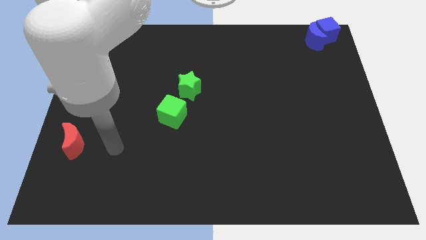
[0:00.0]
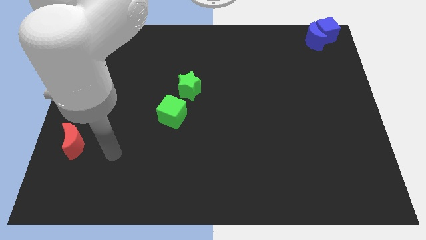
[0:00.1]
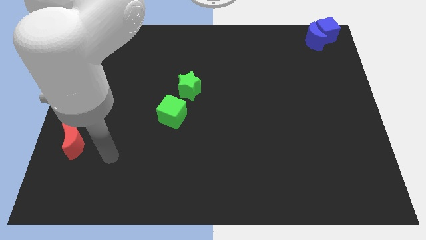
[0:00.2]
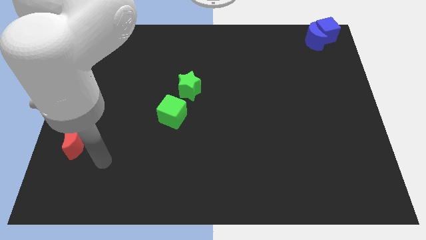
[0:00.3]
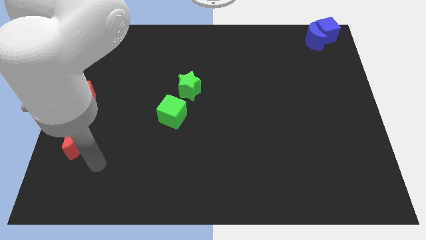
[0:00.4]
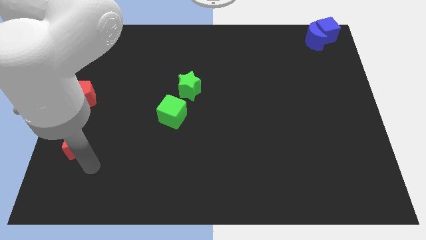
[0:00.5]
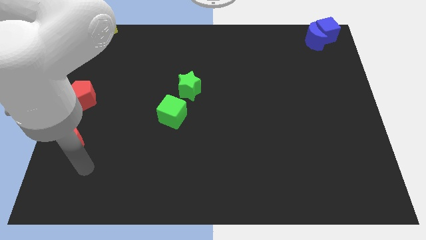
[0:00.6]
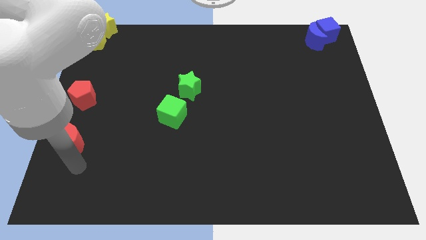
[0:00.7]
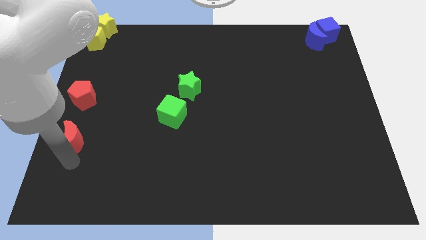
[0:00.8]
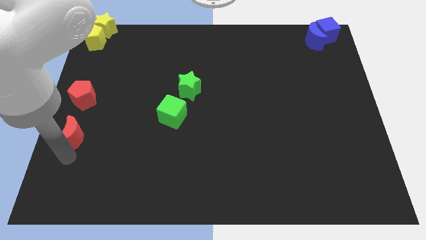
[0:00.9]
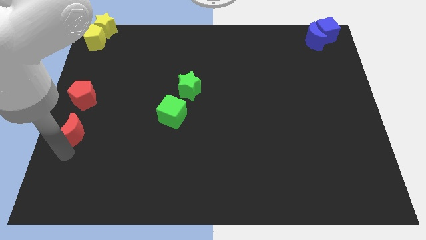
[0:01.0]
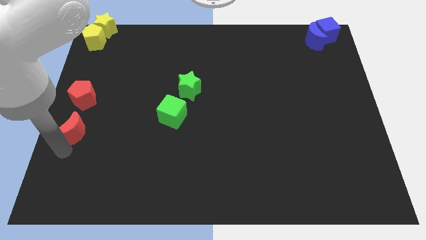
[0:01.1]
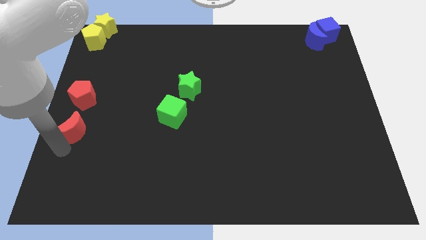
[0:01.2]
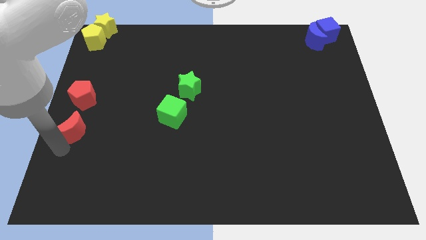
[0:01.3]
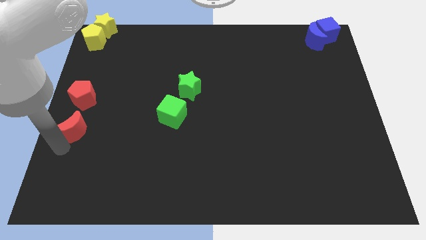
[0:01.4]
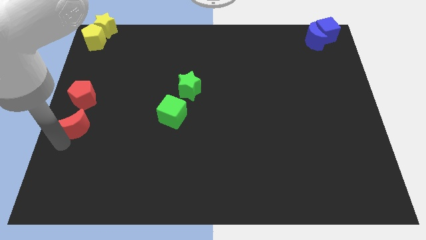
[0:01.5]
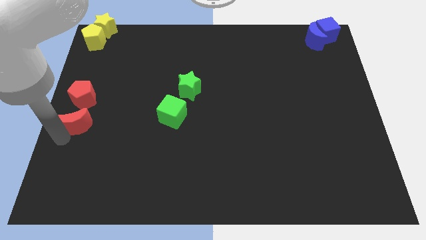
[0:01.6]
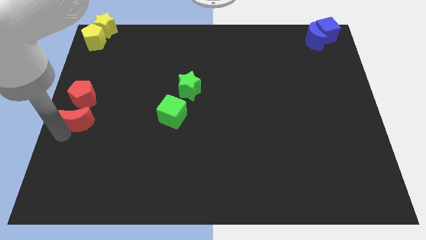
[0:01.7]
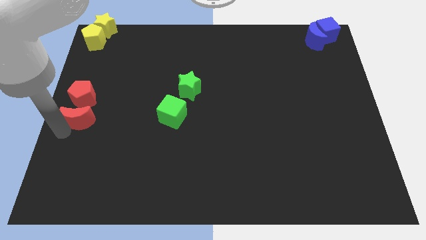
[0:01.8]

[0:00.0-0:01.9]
place the red moon at the bottom of the red pentagon

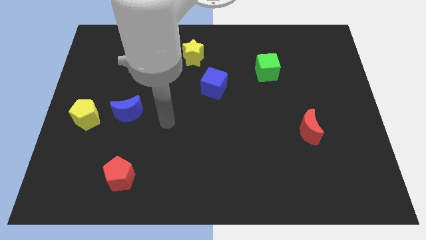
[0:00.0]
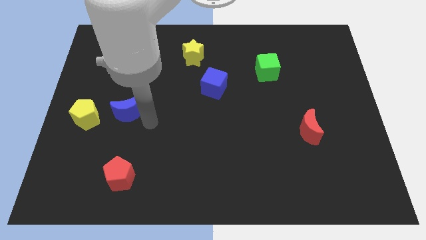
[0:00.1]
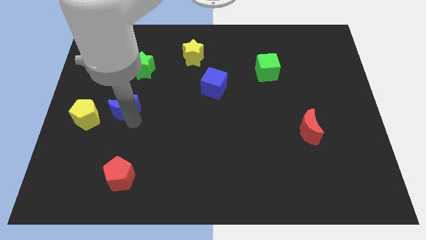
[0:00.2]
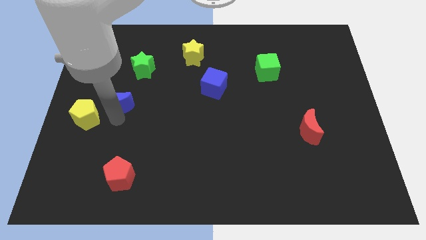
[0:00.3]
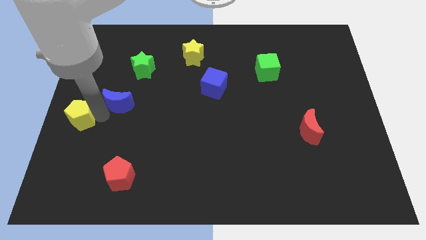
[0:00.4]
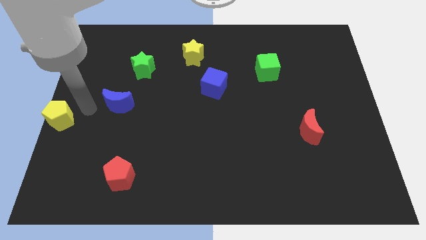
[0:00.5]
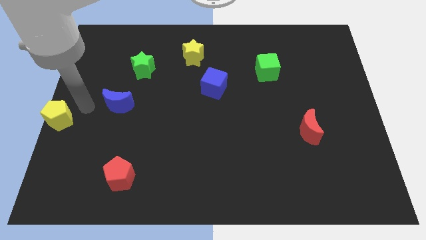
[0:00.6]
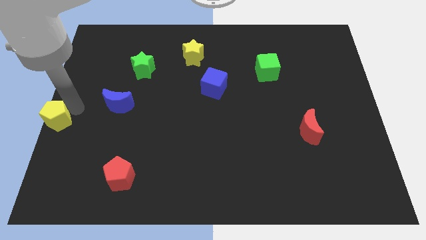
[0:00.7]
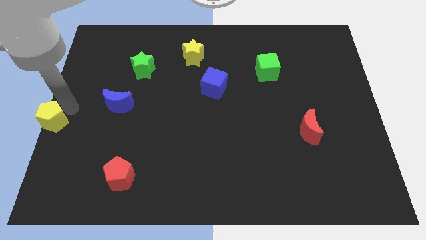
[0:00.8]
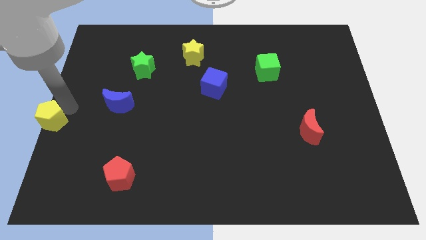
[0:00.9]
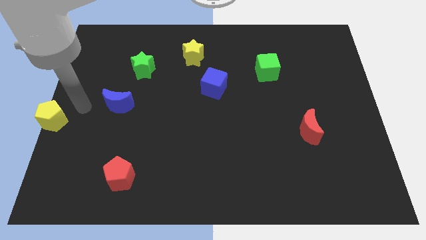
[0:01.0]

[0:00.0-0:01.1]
place the yellow pentagon at the left center of the board

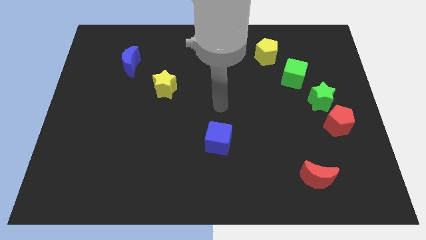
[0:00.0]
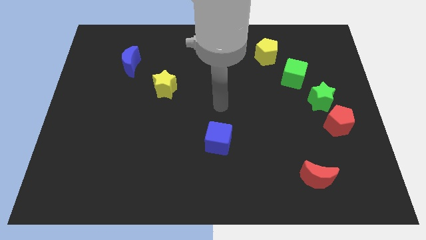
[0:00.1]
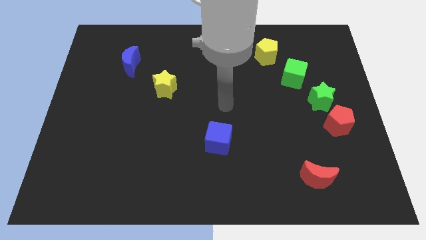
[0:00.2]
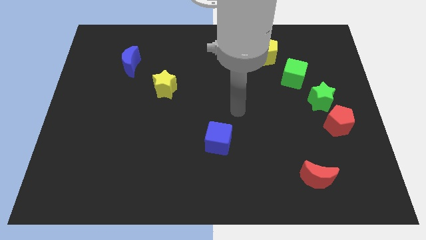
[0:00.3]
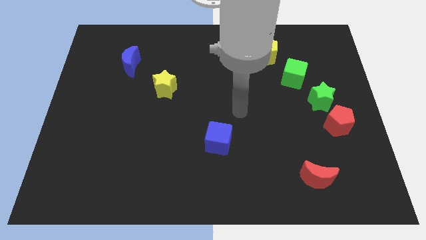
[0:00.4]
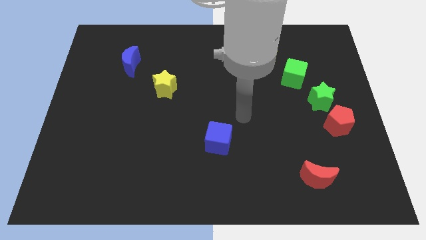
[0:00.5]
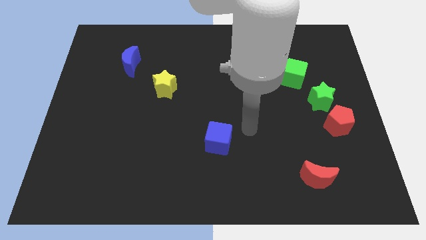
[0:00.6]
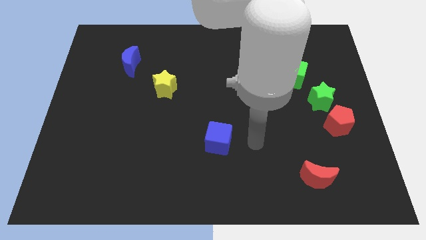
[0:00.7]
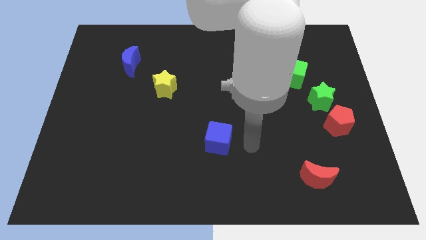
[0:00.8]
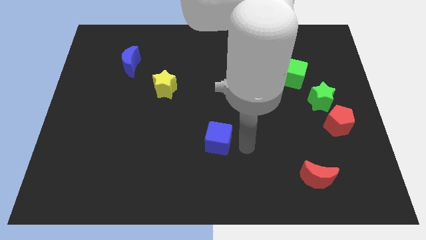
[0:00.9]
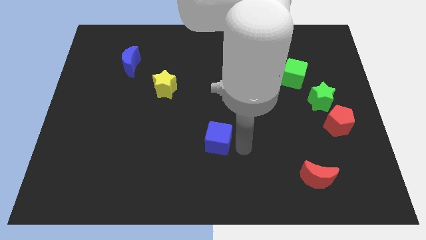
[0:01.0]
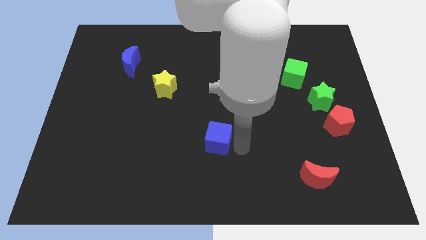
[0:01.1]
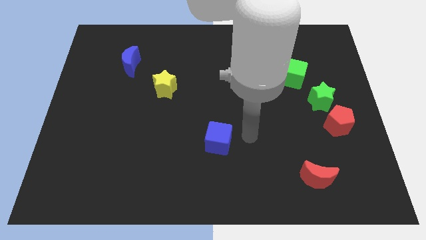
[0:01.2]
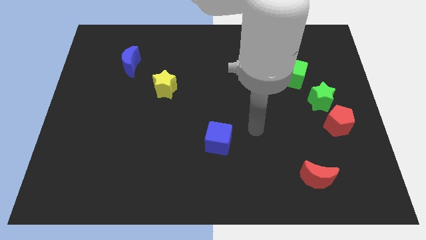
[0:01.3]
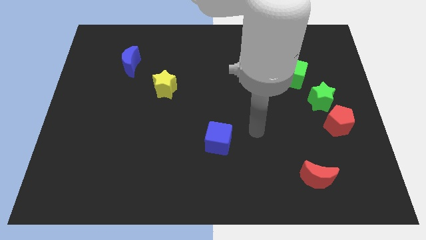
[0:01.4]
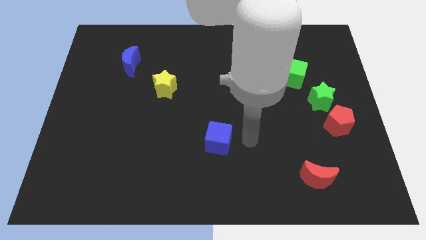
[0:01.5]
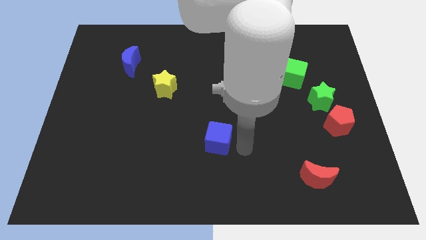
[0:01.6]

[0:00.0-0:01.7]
place your arm to the right side of the blue moon

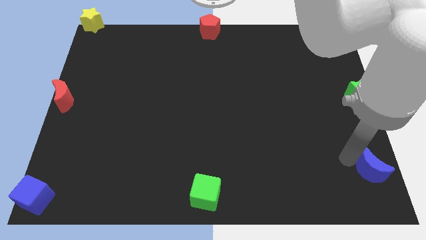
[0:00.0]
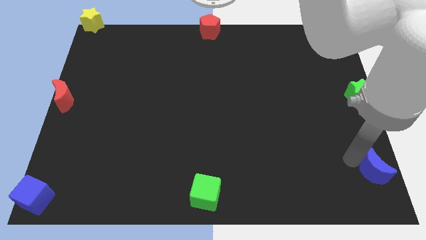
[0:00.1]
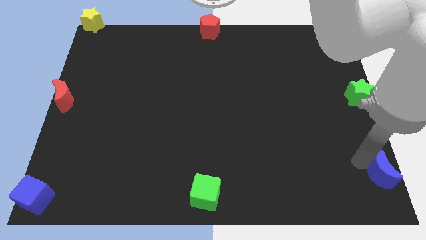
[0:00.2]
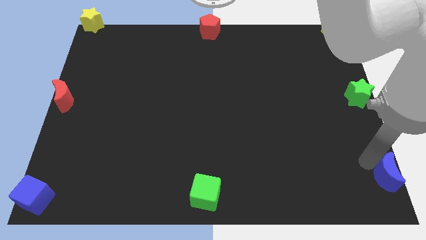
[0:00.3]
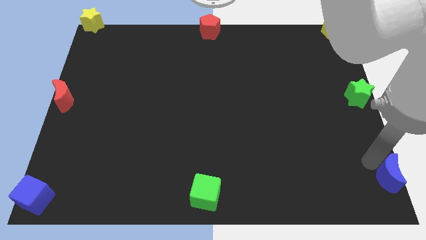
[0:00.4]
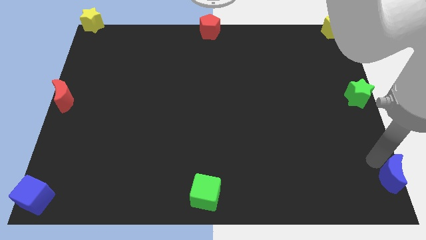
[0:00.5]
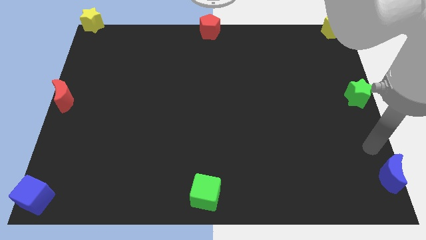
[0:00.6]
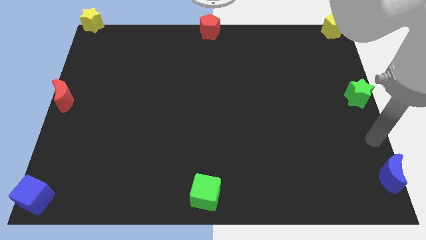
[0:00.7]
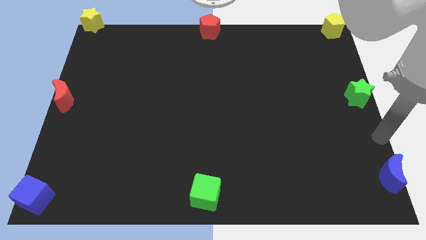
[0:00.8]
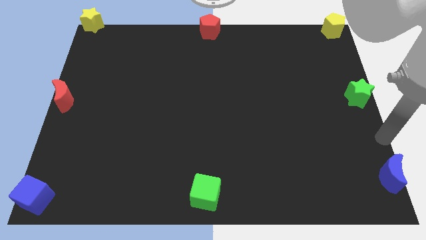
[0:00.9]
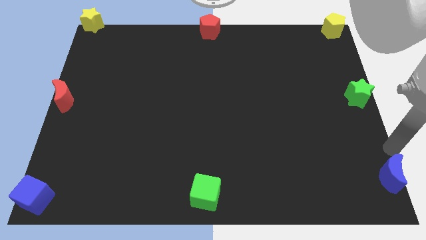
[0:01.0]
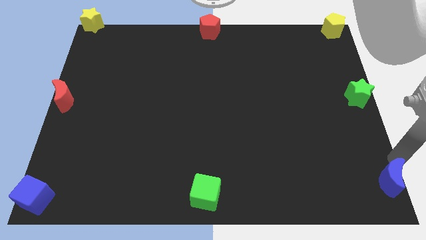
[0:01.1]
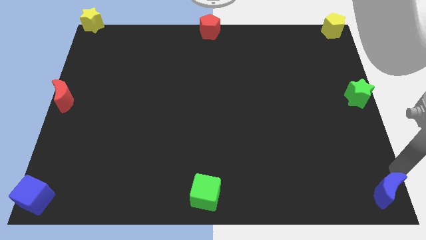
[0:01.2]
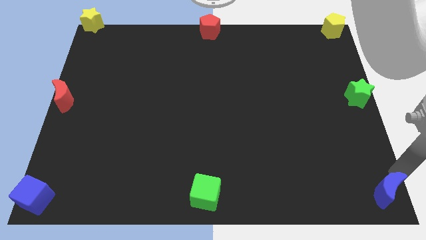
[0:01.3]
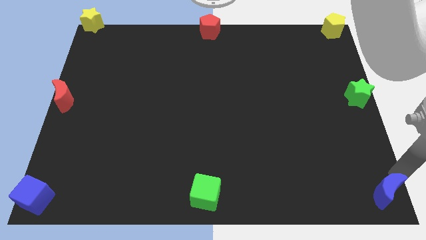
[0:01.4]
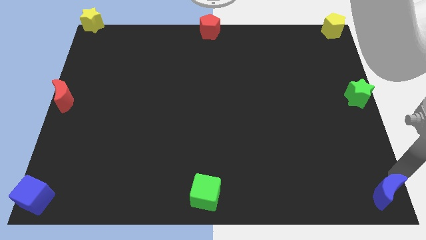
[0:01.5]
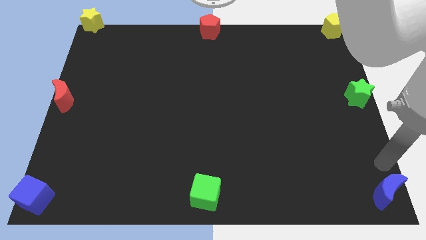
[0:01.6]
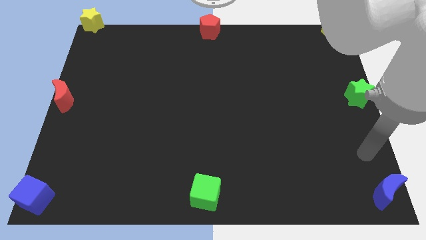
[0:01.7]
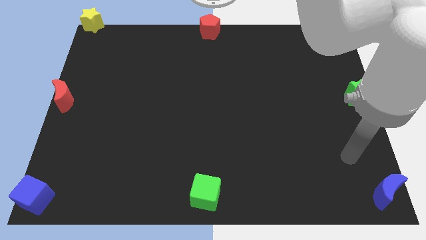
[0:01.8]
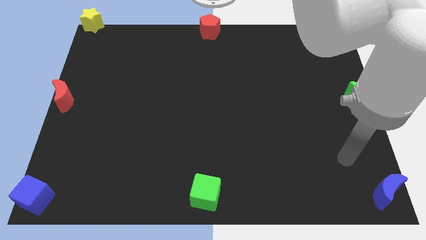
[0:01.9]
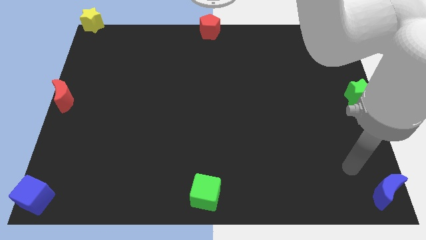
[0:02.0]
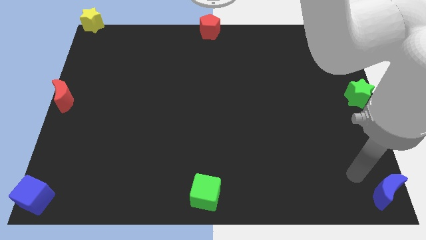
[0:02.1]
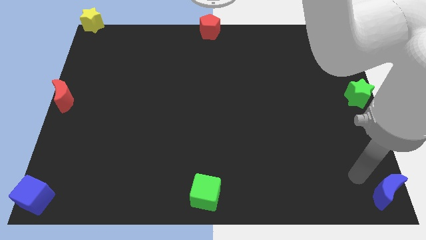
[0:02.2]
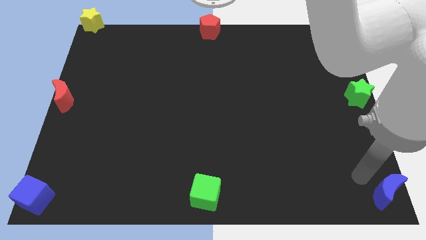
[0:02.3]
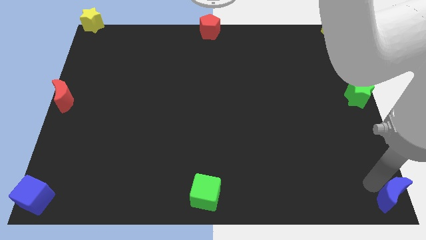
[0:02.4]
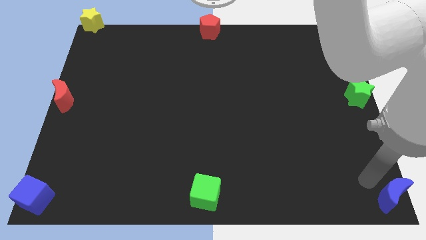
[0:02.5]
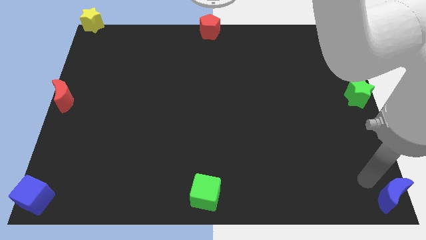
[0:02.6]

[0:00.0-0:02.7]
push blue crescent at the bottom right of the board

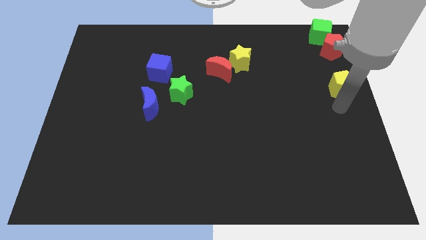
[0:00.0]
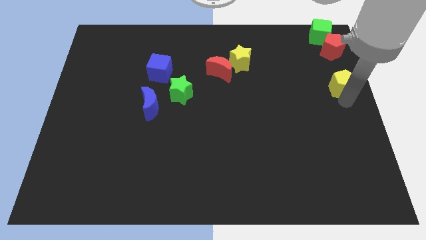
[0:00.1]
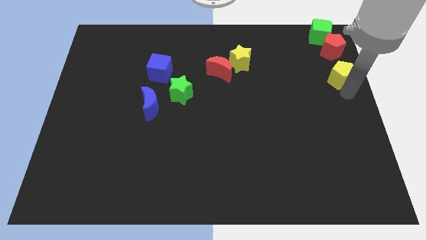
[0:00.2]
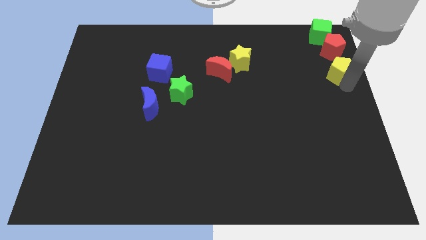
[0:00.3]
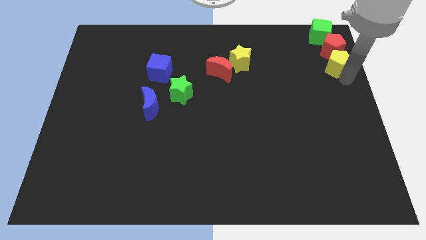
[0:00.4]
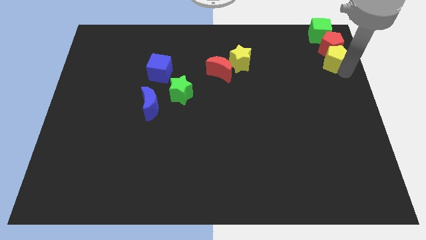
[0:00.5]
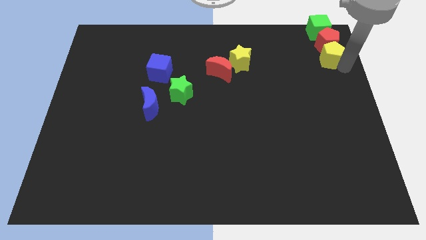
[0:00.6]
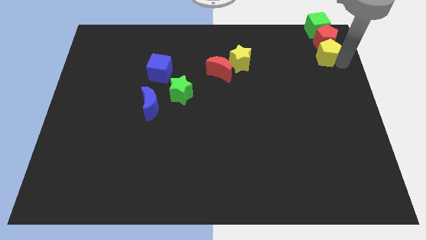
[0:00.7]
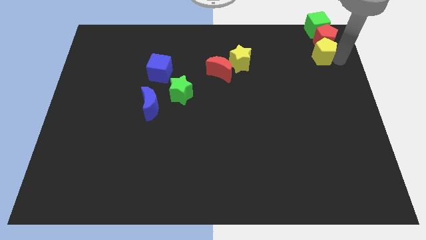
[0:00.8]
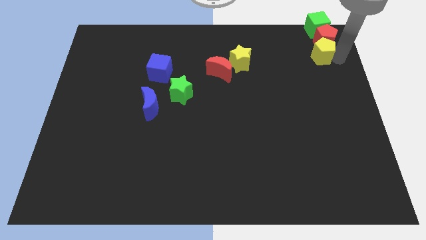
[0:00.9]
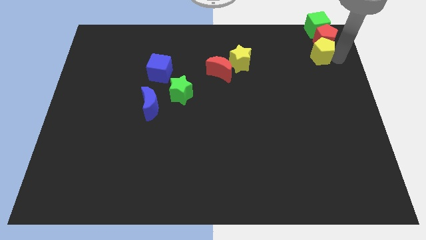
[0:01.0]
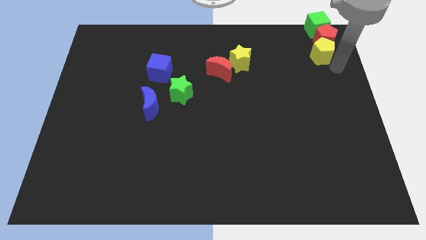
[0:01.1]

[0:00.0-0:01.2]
push yellow pentagon into red pentagon

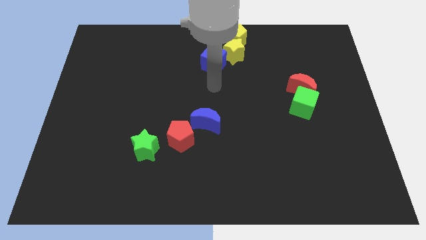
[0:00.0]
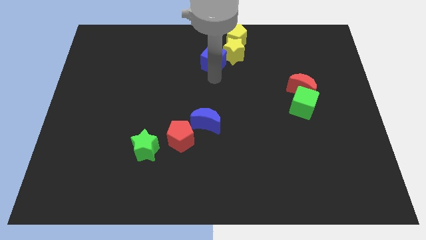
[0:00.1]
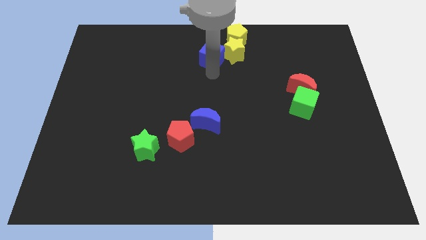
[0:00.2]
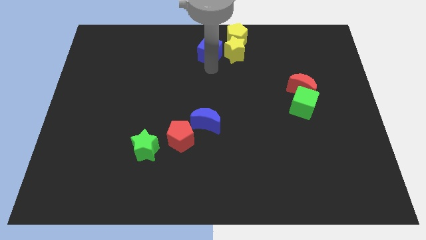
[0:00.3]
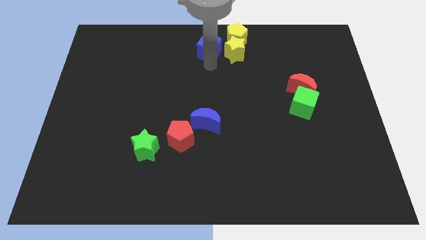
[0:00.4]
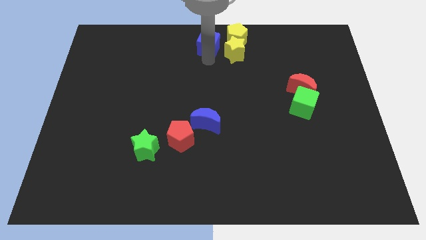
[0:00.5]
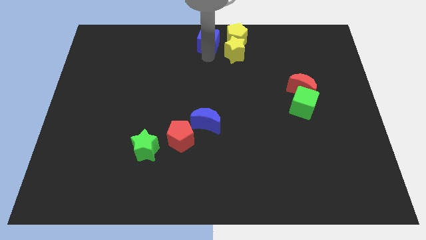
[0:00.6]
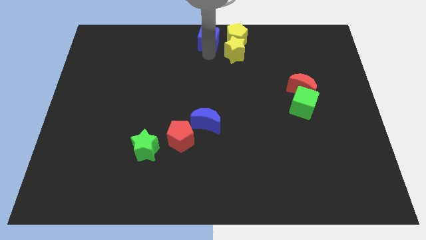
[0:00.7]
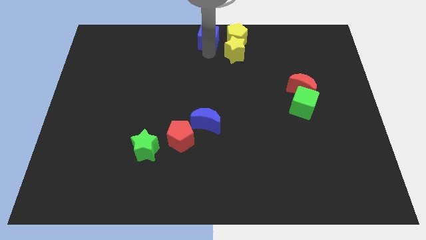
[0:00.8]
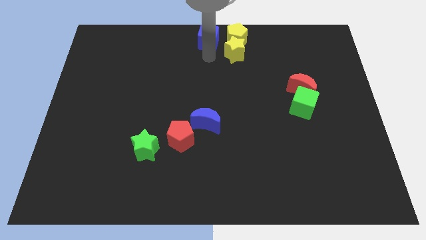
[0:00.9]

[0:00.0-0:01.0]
place blue cube above the blue crescent
